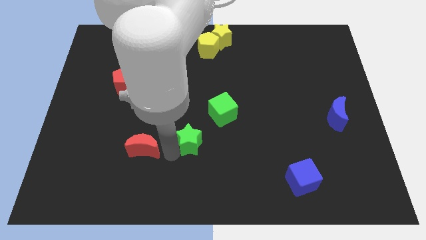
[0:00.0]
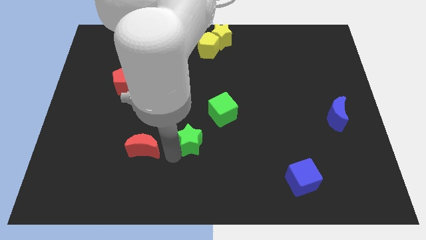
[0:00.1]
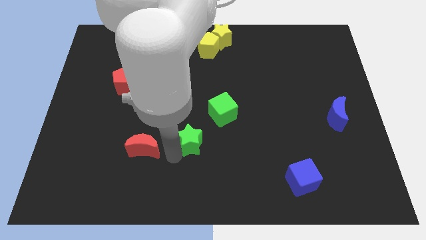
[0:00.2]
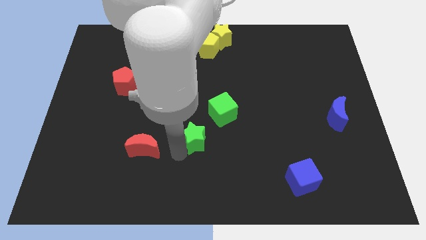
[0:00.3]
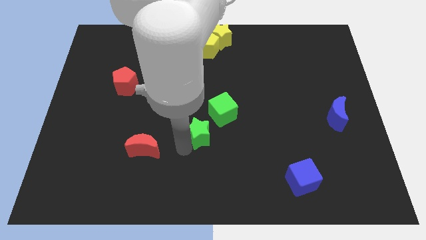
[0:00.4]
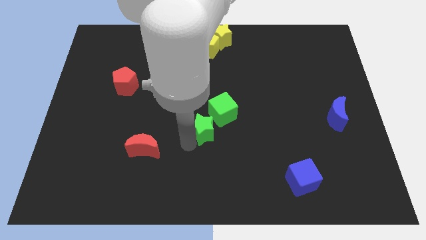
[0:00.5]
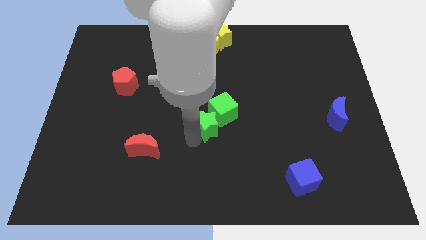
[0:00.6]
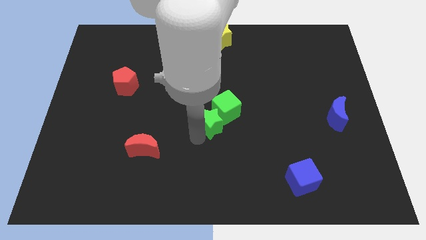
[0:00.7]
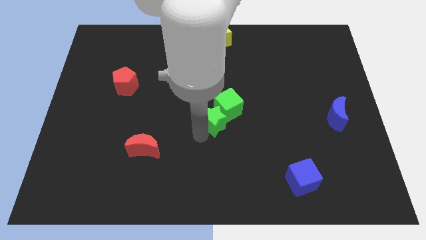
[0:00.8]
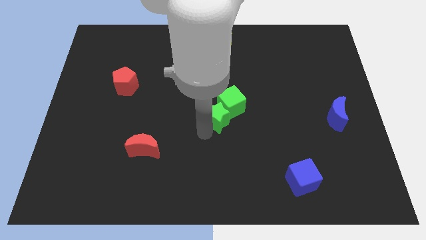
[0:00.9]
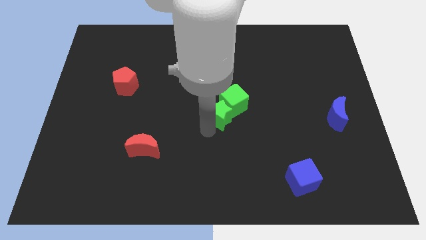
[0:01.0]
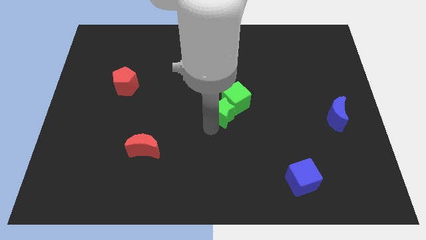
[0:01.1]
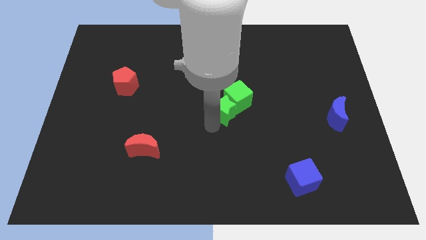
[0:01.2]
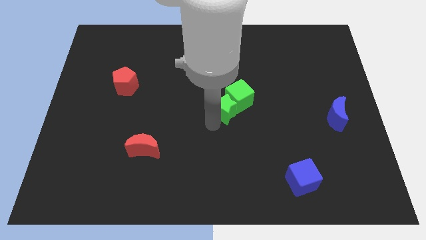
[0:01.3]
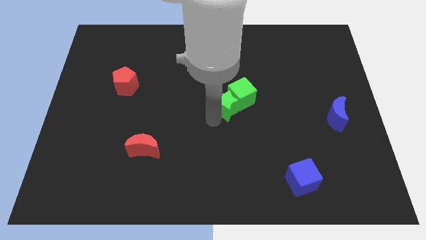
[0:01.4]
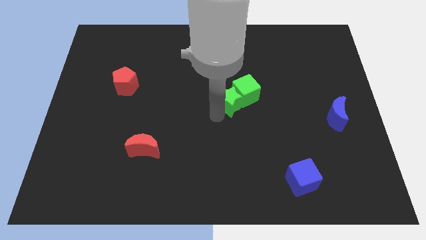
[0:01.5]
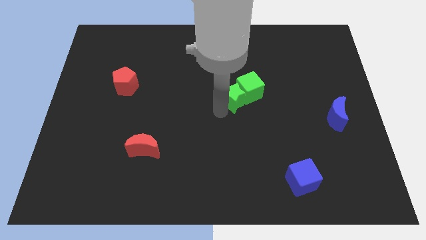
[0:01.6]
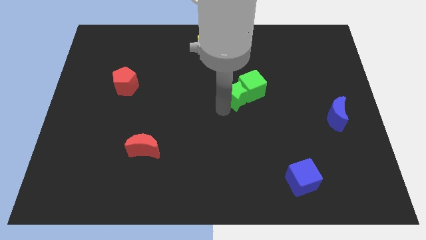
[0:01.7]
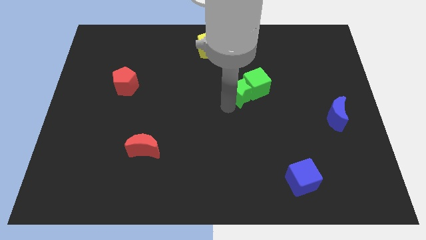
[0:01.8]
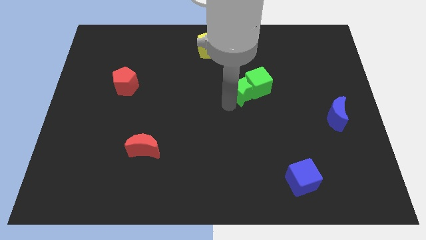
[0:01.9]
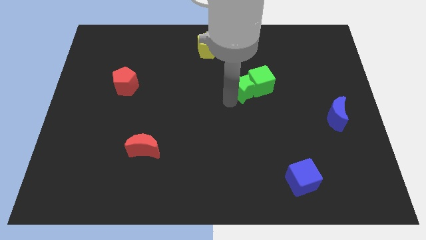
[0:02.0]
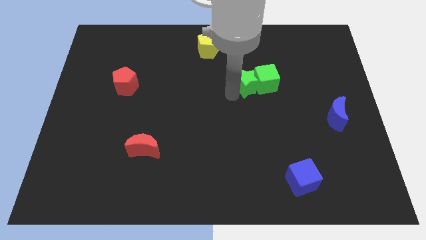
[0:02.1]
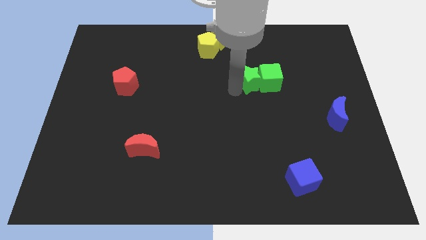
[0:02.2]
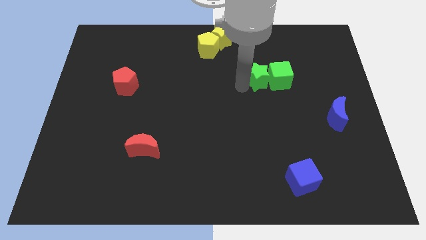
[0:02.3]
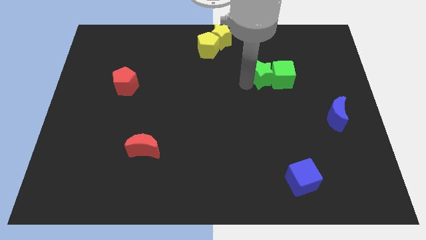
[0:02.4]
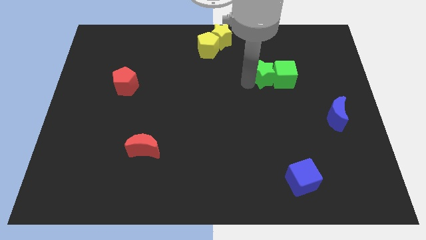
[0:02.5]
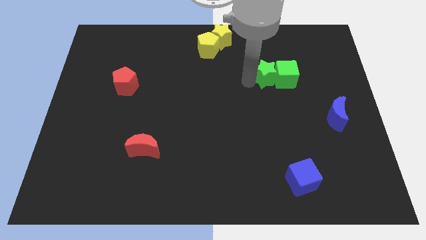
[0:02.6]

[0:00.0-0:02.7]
slide the green blocks to the right of the red pentagon

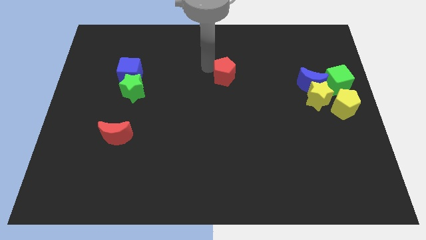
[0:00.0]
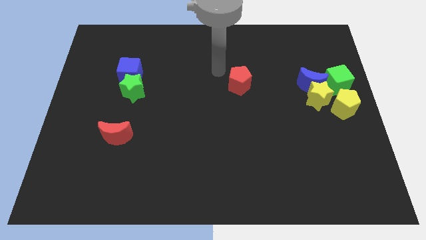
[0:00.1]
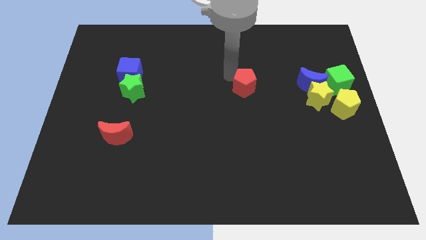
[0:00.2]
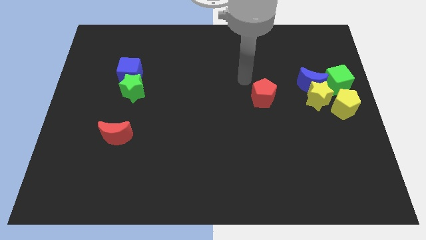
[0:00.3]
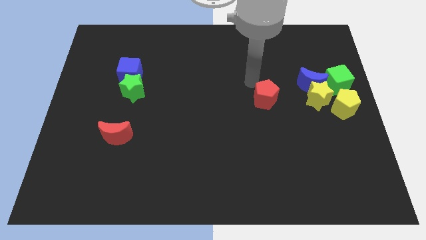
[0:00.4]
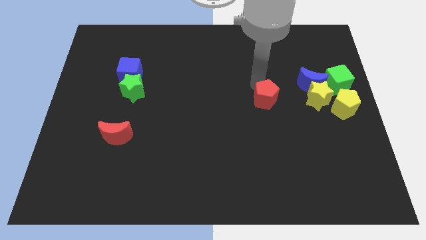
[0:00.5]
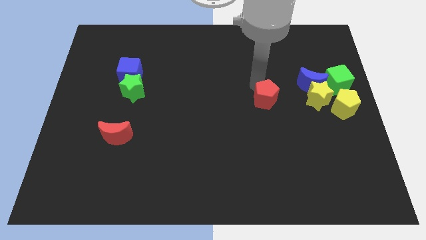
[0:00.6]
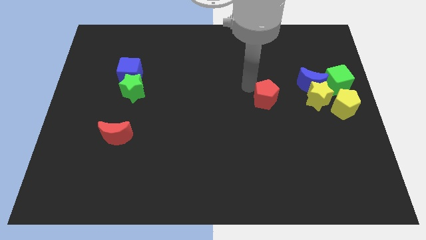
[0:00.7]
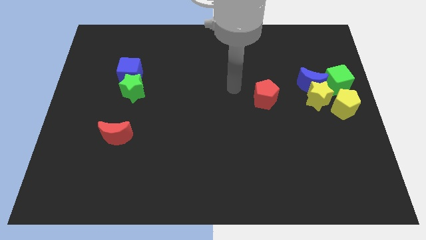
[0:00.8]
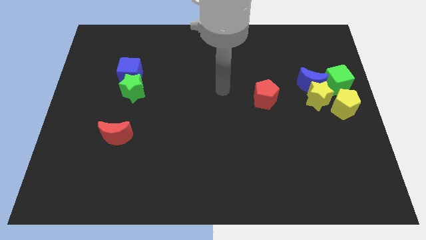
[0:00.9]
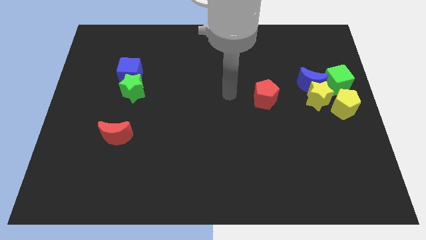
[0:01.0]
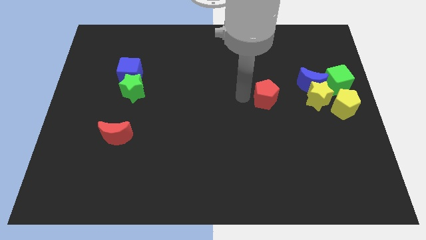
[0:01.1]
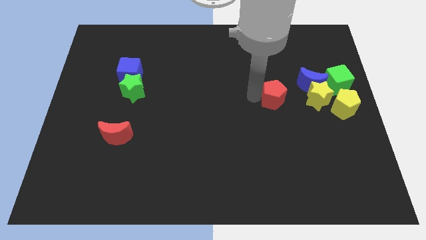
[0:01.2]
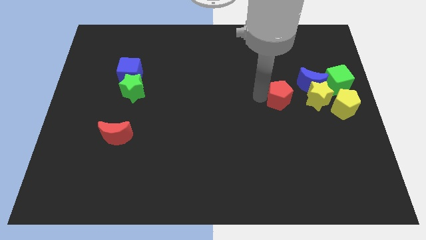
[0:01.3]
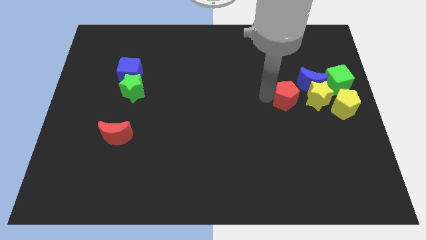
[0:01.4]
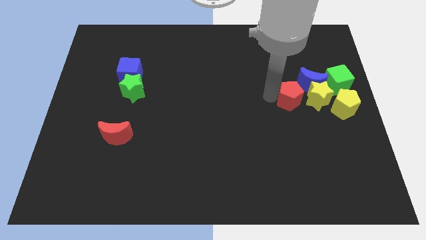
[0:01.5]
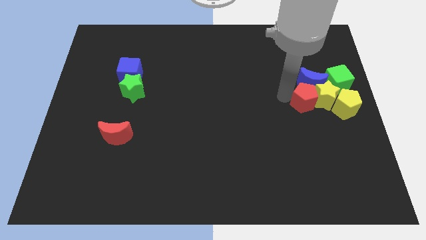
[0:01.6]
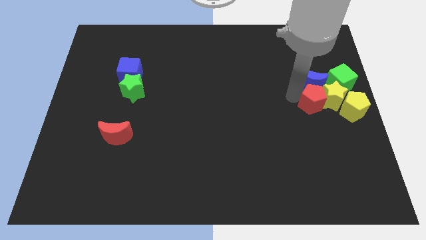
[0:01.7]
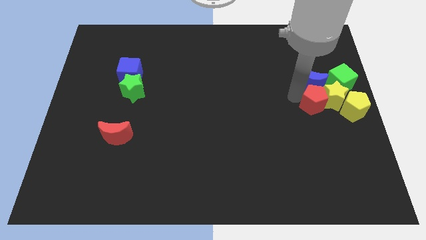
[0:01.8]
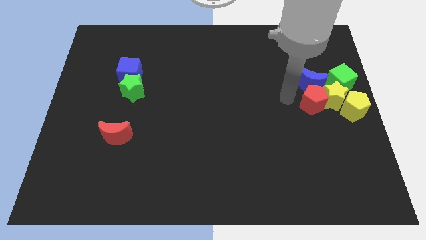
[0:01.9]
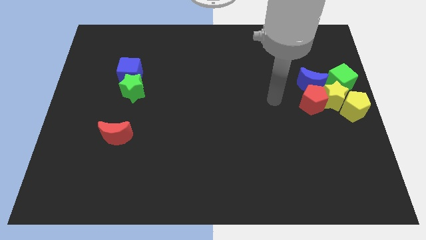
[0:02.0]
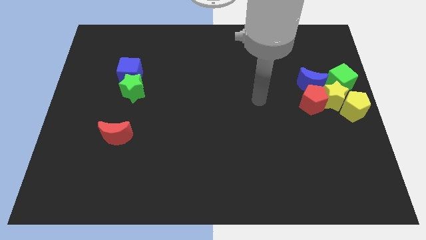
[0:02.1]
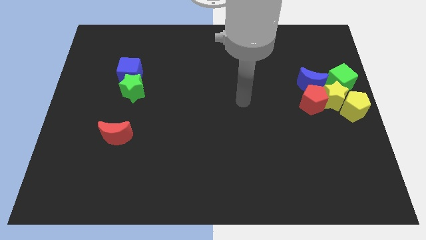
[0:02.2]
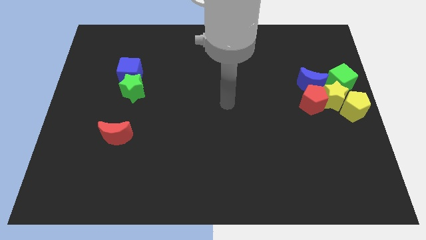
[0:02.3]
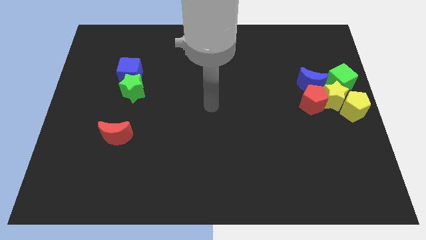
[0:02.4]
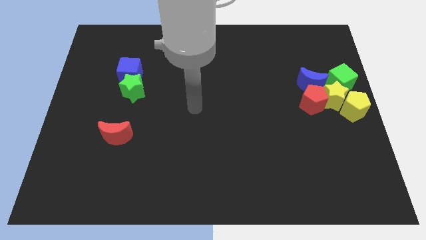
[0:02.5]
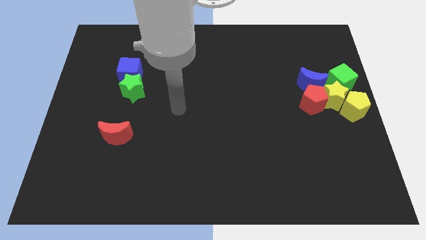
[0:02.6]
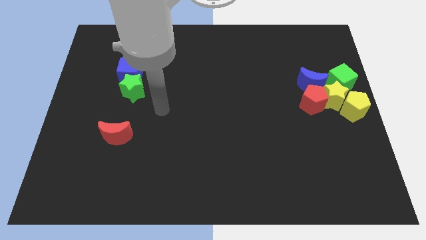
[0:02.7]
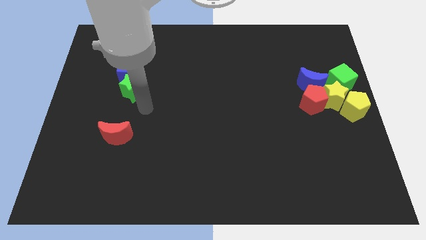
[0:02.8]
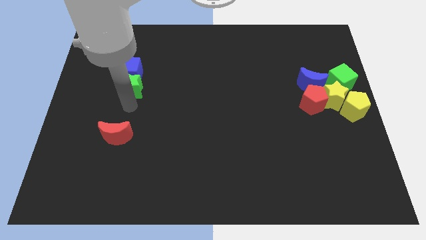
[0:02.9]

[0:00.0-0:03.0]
push red pentagon into yellow star

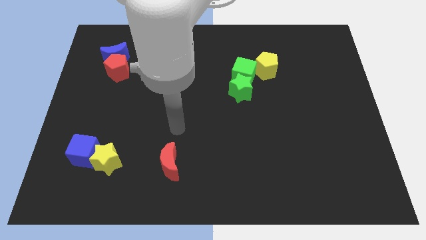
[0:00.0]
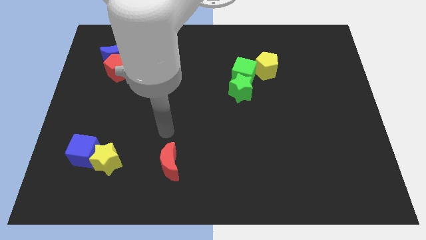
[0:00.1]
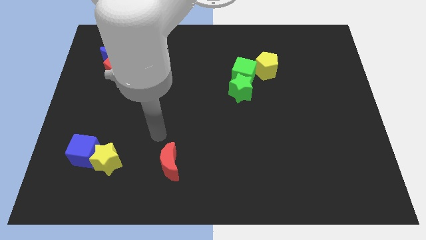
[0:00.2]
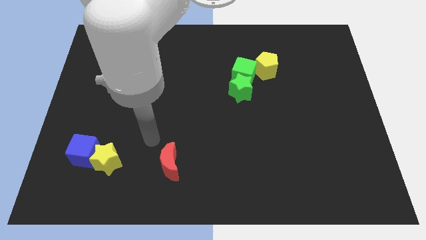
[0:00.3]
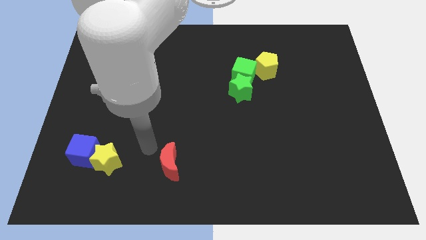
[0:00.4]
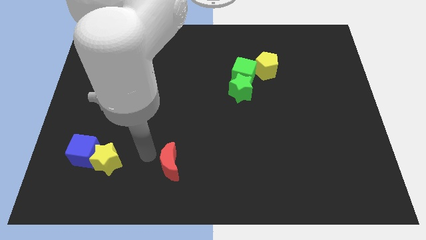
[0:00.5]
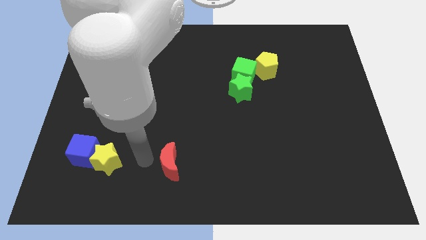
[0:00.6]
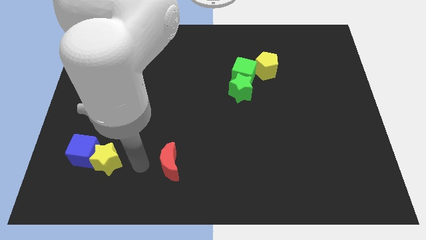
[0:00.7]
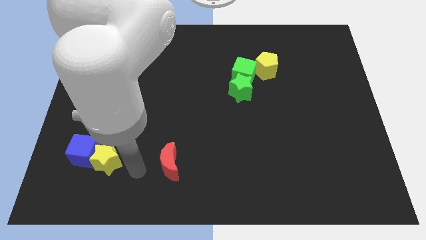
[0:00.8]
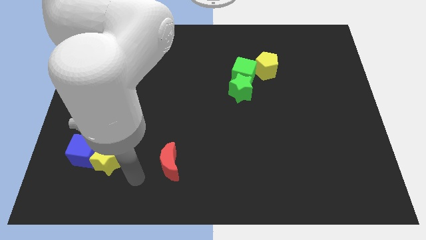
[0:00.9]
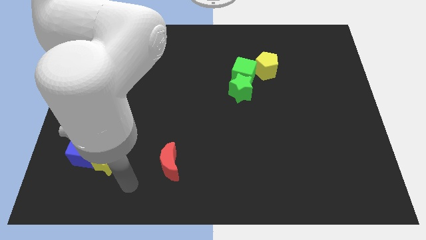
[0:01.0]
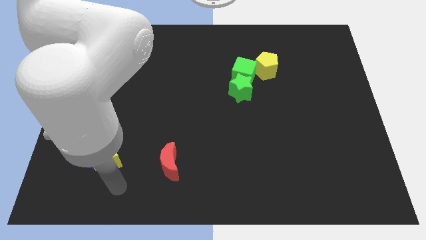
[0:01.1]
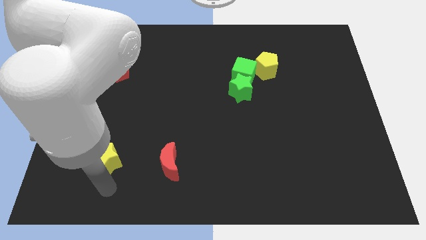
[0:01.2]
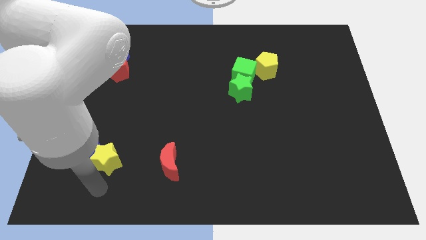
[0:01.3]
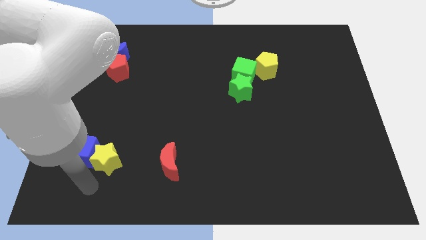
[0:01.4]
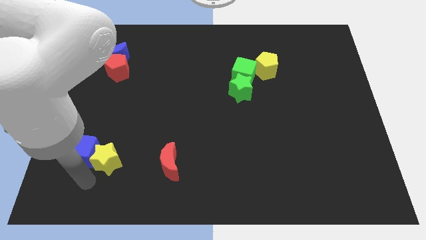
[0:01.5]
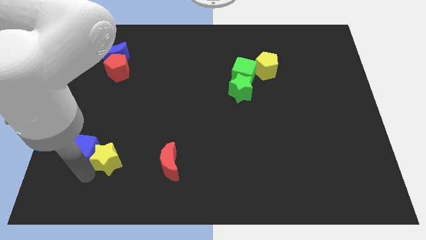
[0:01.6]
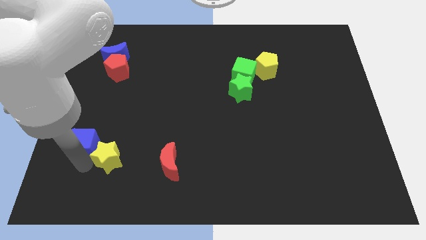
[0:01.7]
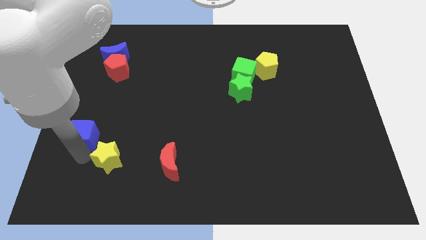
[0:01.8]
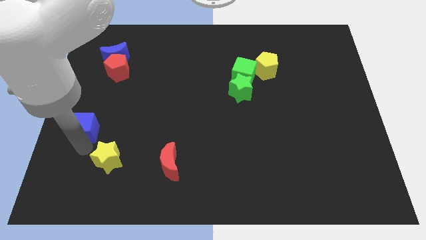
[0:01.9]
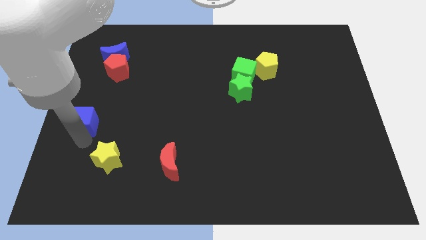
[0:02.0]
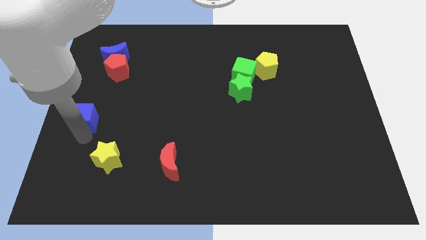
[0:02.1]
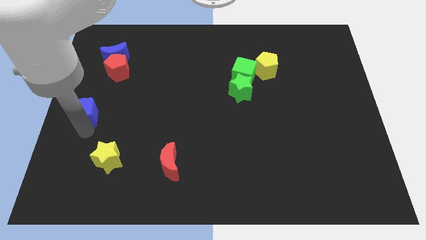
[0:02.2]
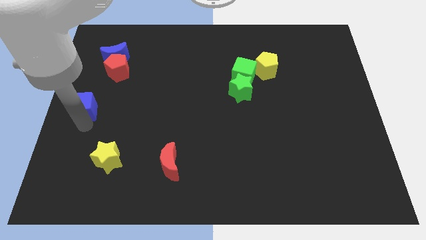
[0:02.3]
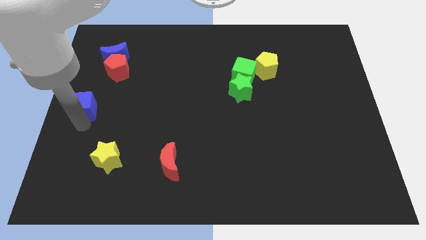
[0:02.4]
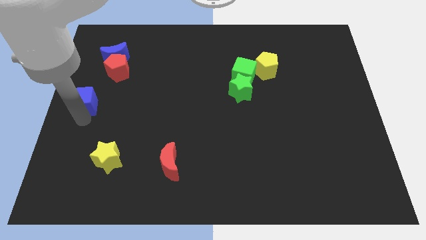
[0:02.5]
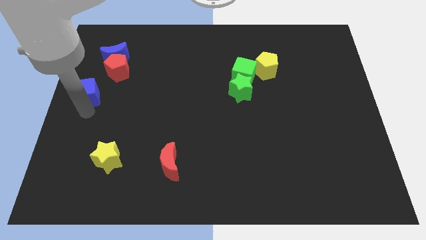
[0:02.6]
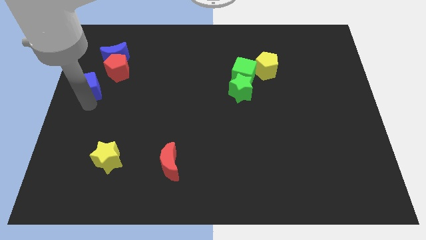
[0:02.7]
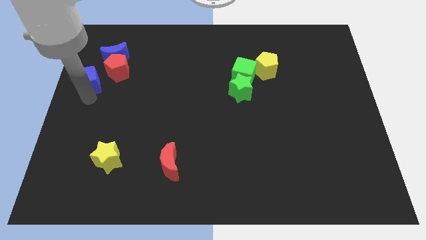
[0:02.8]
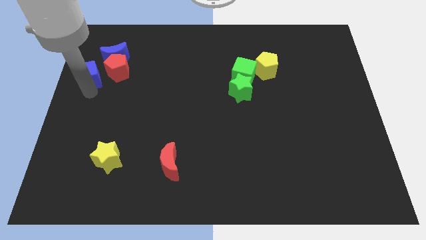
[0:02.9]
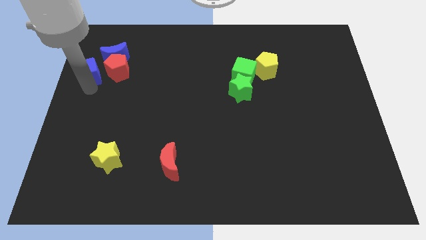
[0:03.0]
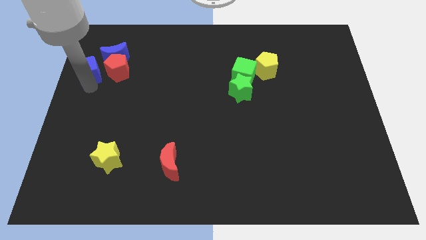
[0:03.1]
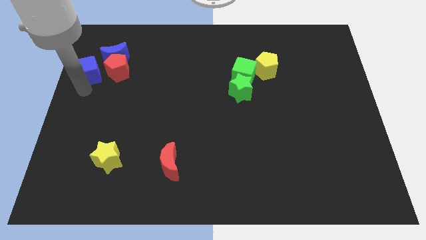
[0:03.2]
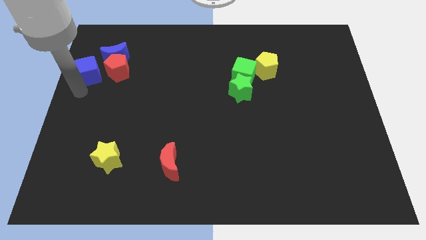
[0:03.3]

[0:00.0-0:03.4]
move the blue cube to the left side of the red pentagon
